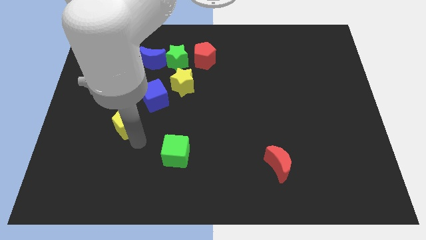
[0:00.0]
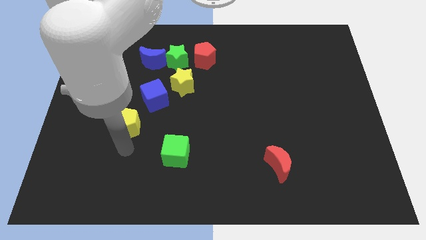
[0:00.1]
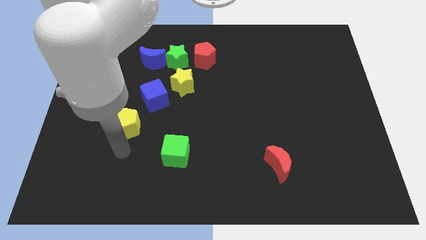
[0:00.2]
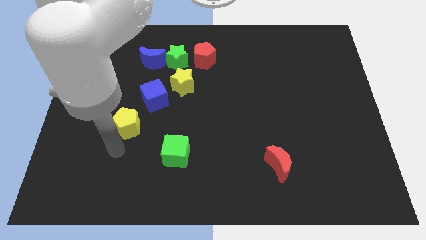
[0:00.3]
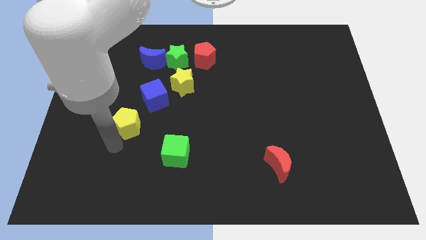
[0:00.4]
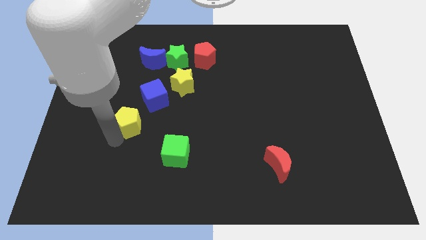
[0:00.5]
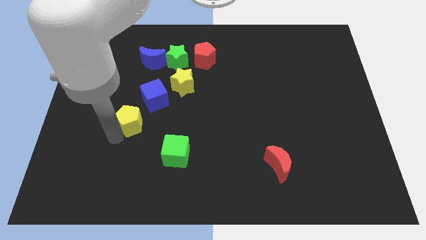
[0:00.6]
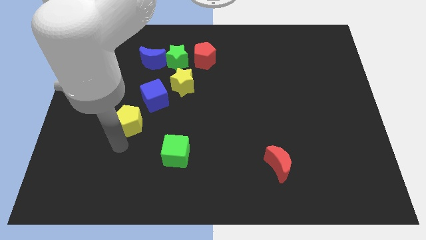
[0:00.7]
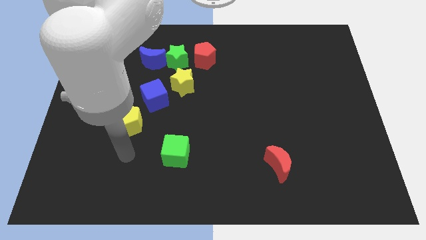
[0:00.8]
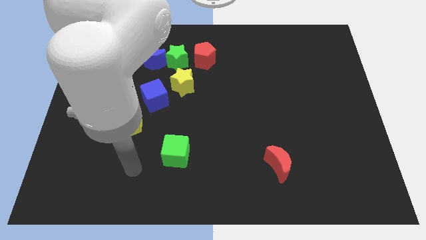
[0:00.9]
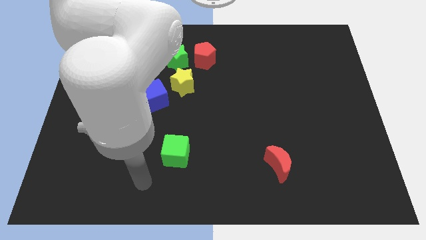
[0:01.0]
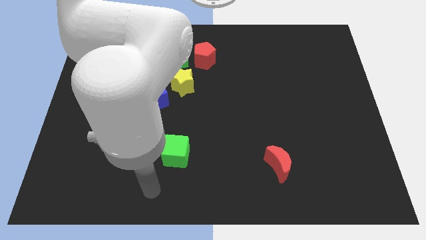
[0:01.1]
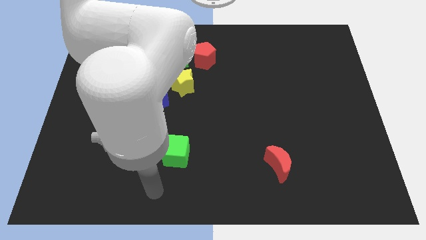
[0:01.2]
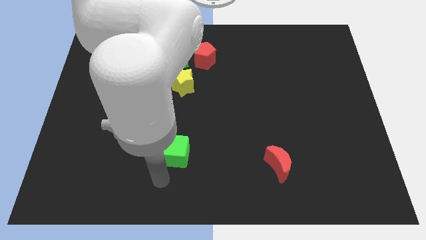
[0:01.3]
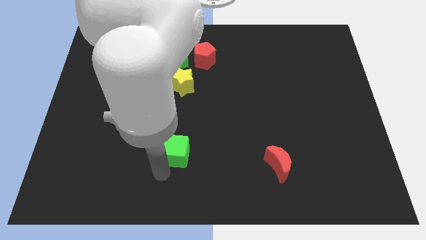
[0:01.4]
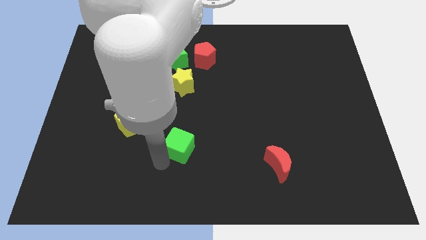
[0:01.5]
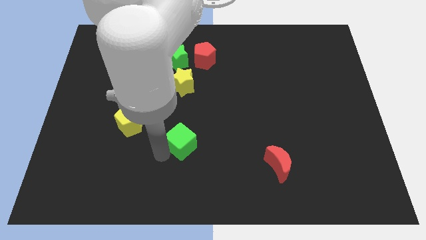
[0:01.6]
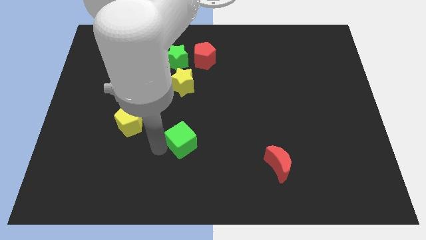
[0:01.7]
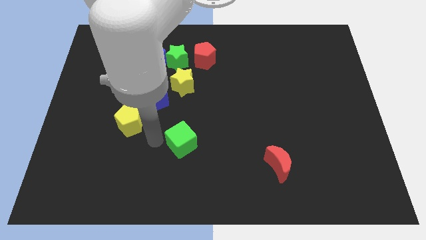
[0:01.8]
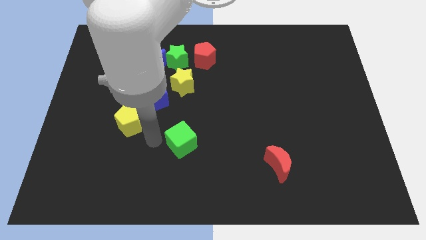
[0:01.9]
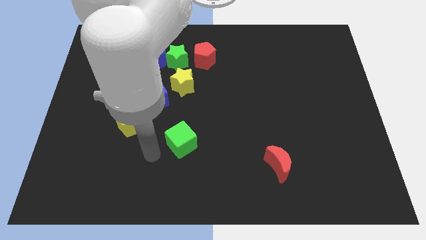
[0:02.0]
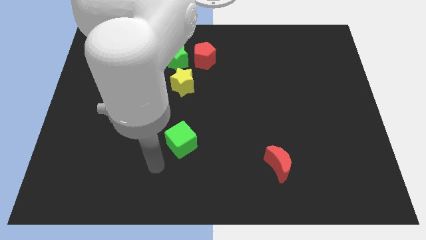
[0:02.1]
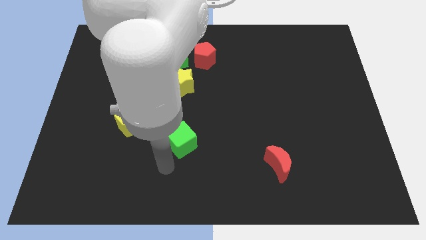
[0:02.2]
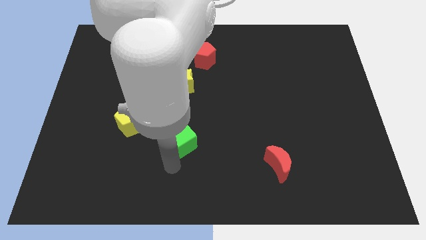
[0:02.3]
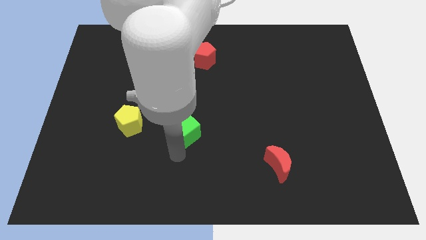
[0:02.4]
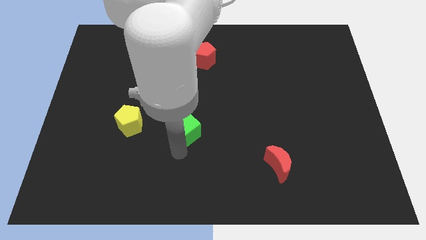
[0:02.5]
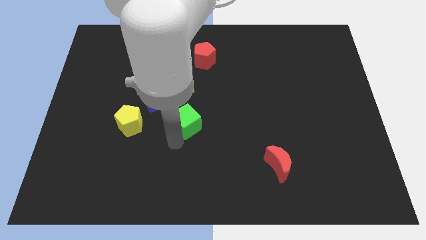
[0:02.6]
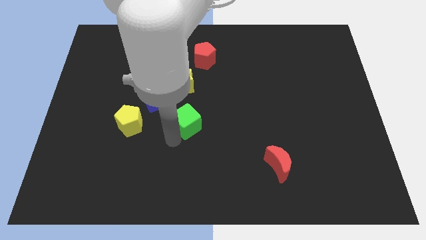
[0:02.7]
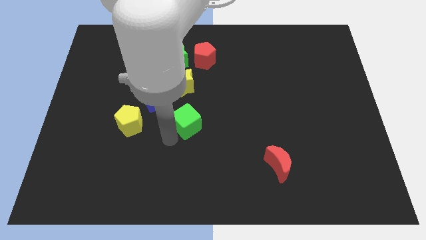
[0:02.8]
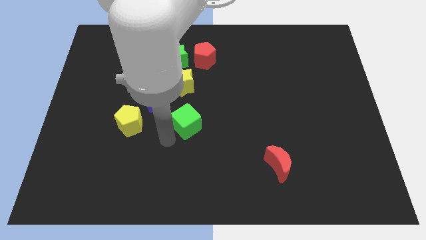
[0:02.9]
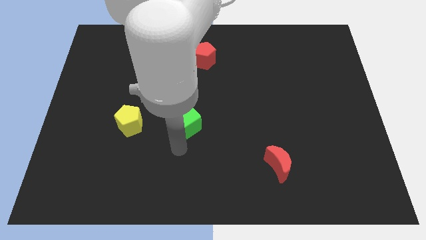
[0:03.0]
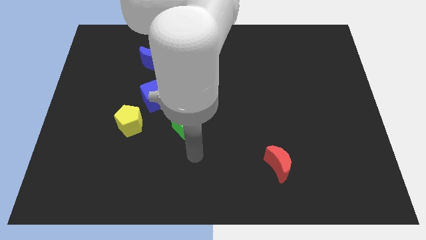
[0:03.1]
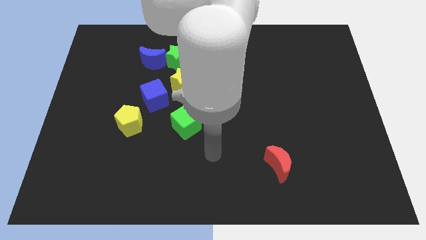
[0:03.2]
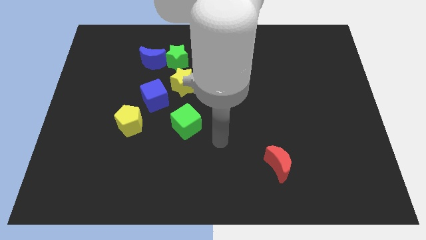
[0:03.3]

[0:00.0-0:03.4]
push the green cube towards the yellow star

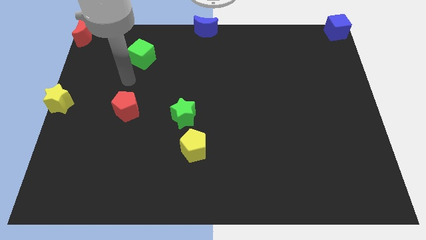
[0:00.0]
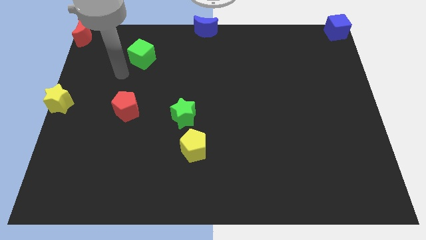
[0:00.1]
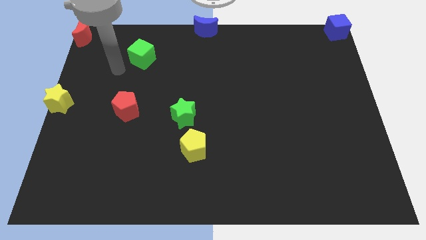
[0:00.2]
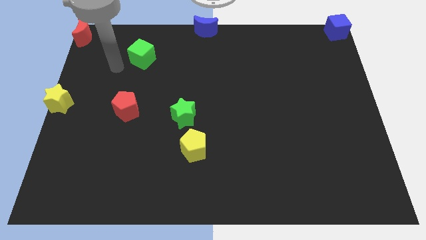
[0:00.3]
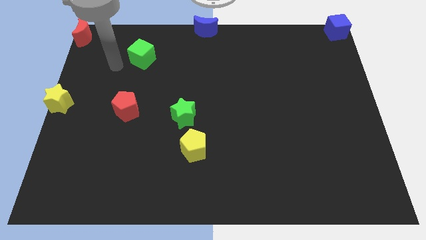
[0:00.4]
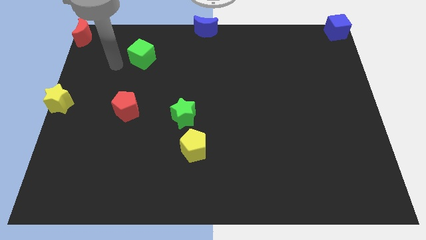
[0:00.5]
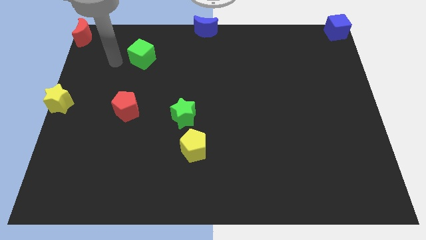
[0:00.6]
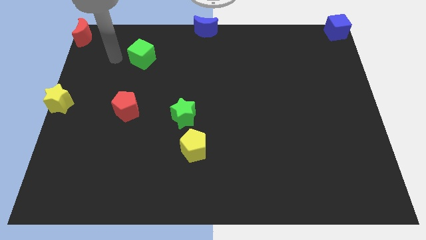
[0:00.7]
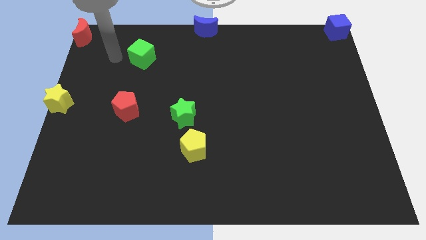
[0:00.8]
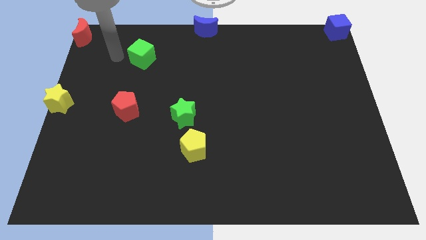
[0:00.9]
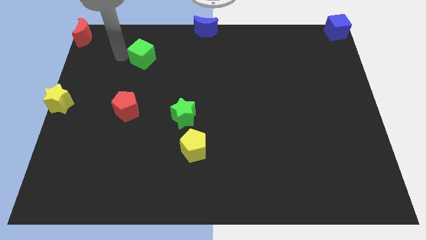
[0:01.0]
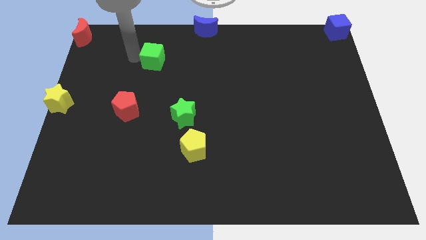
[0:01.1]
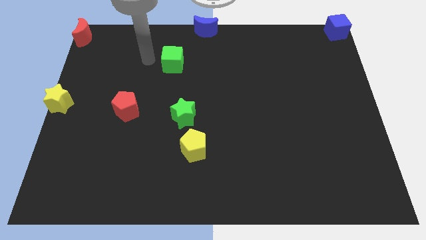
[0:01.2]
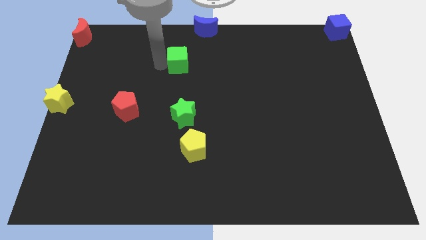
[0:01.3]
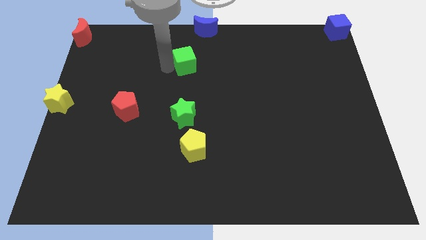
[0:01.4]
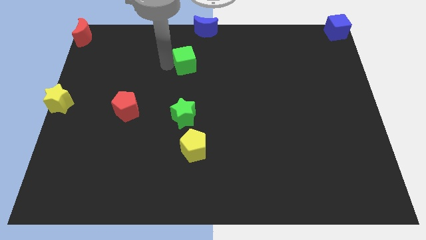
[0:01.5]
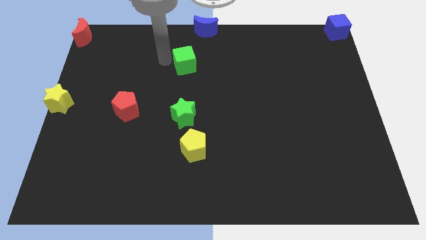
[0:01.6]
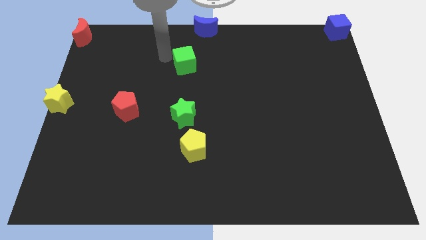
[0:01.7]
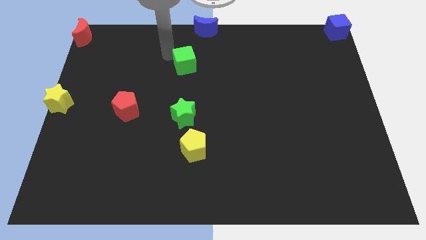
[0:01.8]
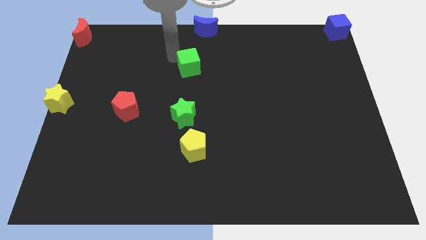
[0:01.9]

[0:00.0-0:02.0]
place the green cube in between the blue moon and green star

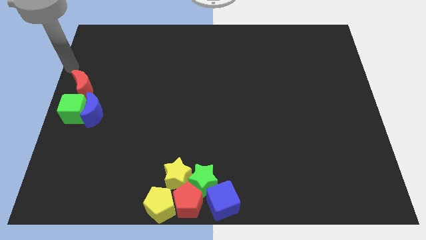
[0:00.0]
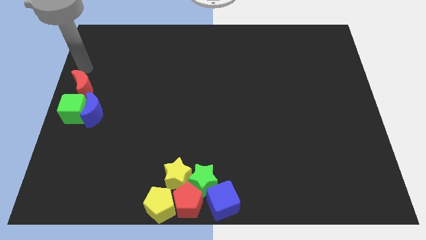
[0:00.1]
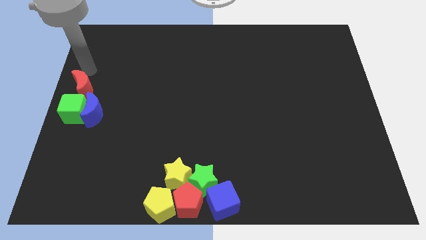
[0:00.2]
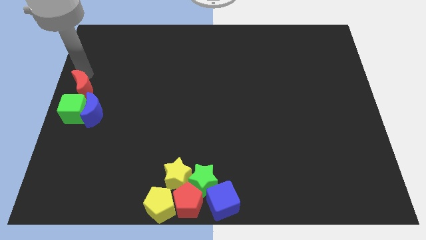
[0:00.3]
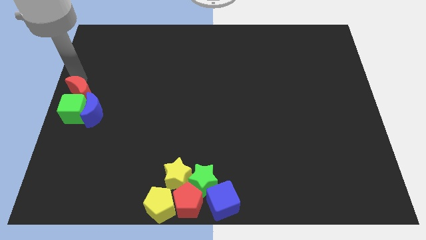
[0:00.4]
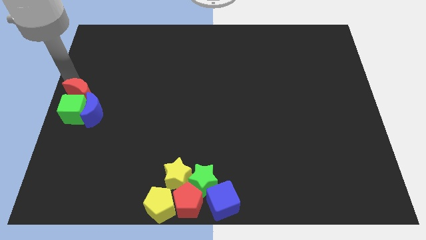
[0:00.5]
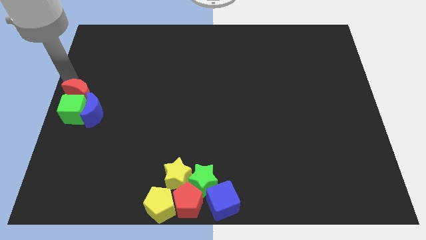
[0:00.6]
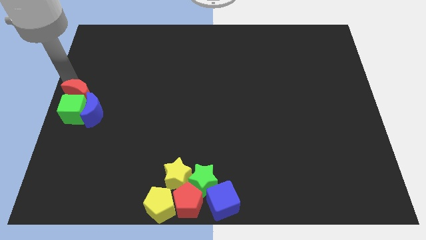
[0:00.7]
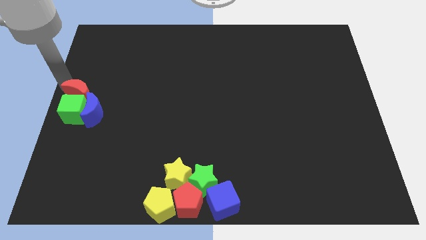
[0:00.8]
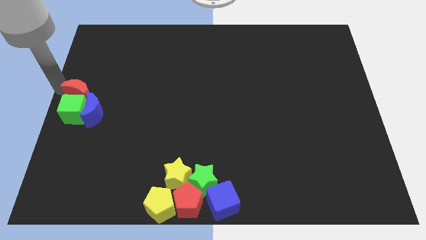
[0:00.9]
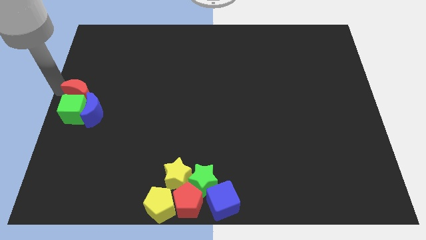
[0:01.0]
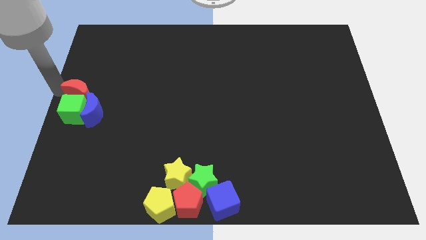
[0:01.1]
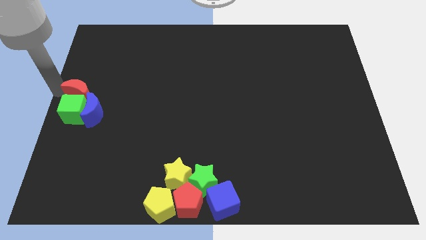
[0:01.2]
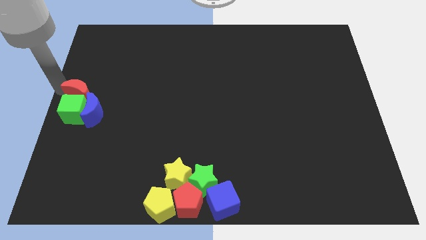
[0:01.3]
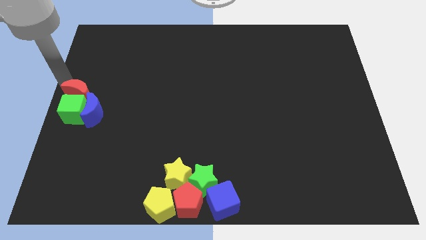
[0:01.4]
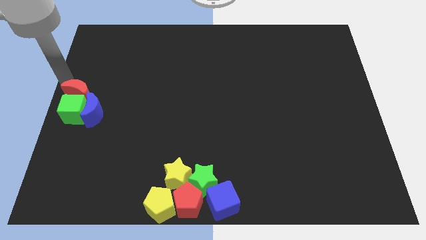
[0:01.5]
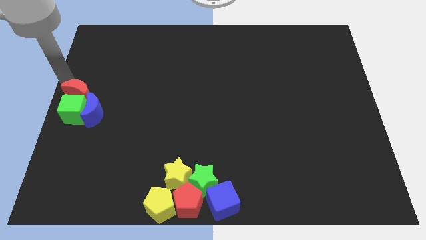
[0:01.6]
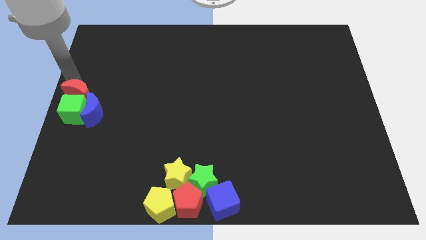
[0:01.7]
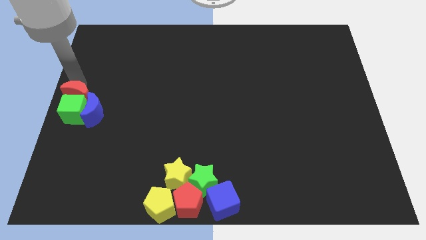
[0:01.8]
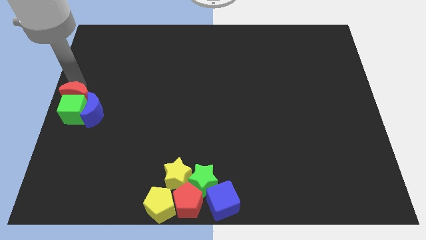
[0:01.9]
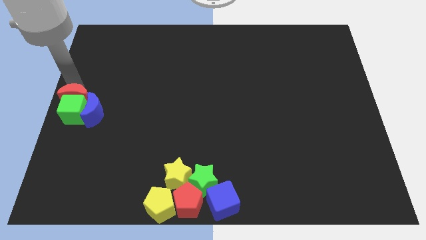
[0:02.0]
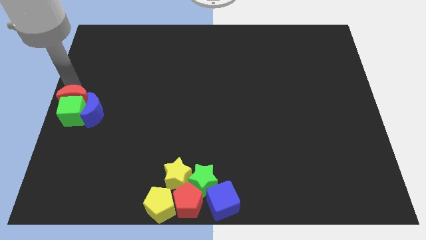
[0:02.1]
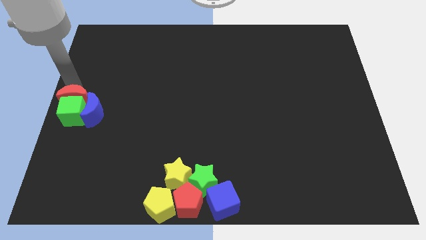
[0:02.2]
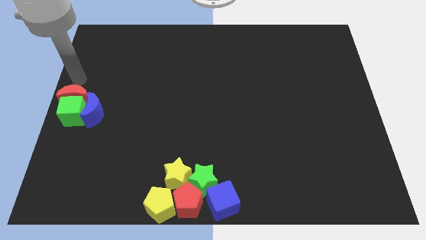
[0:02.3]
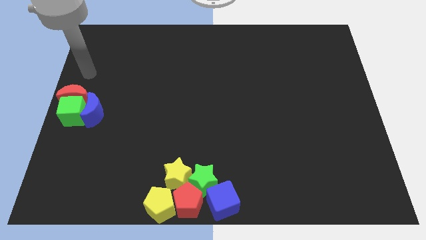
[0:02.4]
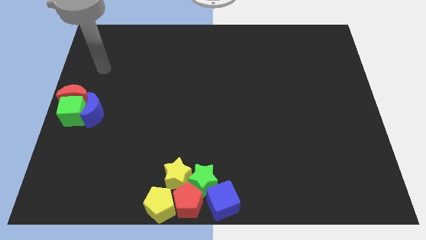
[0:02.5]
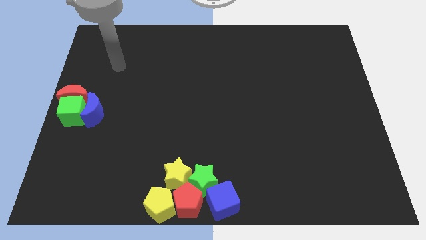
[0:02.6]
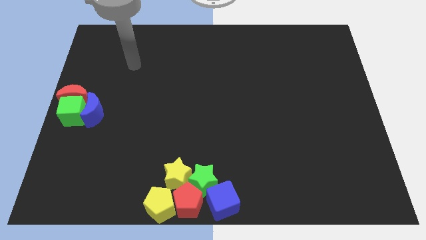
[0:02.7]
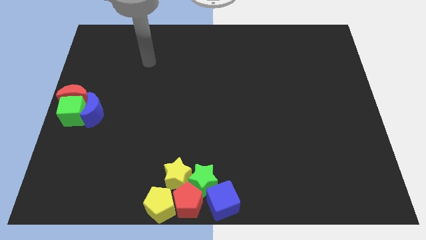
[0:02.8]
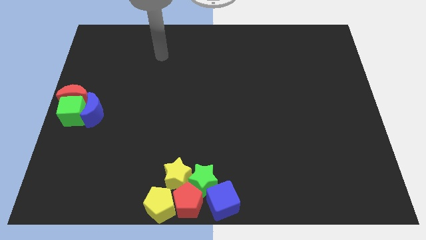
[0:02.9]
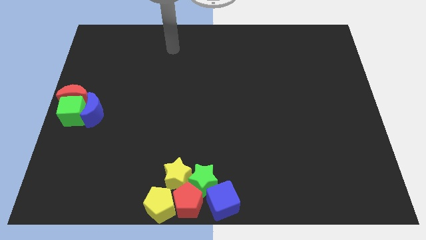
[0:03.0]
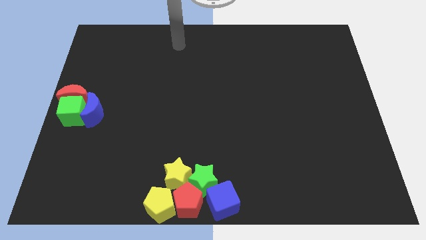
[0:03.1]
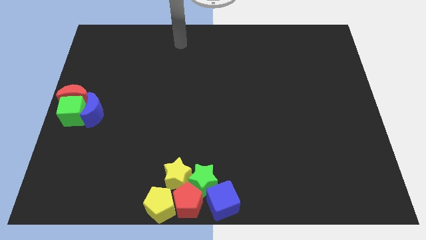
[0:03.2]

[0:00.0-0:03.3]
push the red crescent into green cube

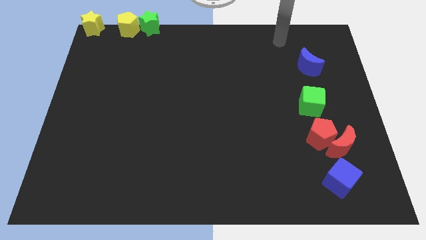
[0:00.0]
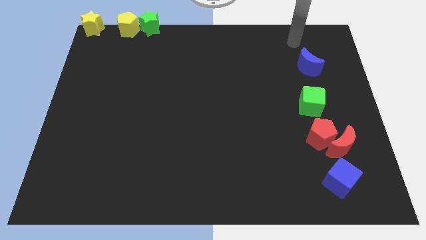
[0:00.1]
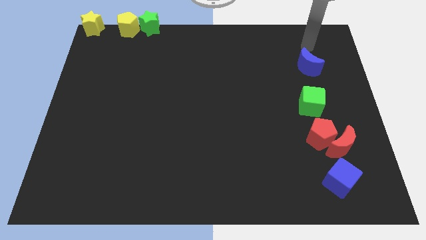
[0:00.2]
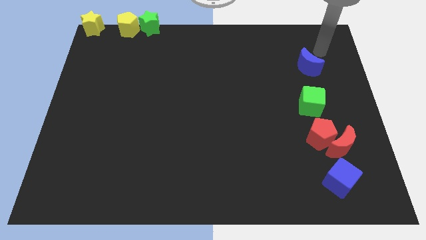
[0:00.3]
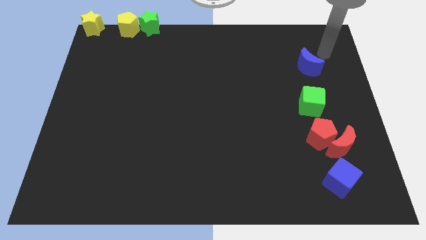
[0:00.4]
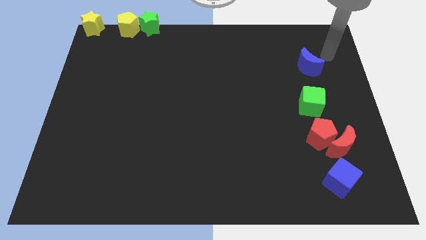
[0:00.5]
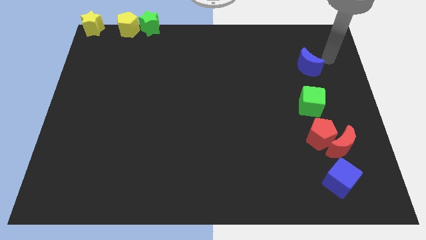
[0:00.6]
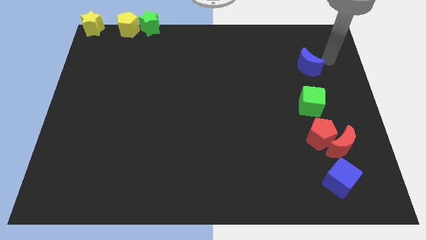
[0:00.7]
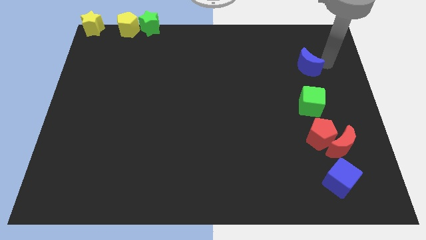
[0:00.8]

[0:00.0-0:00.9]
place the arm to the right of the blue moon
